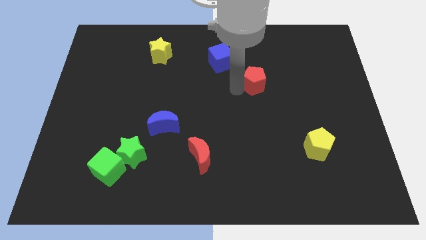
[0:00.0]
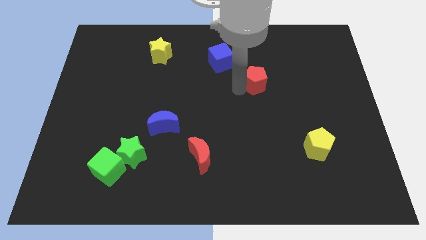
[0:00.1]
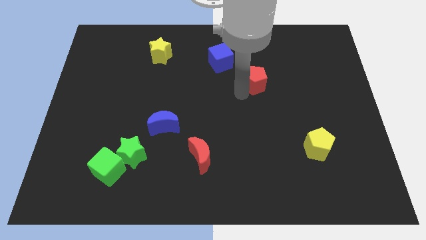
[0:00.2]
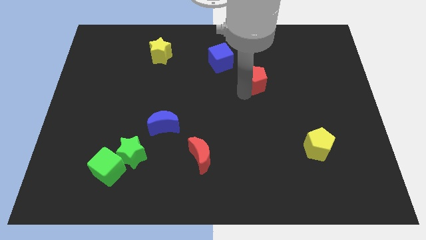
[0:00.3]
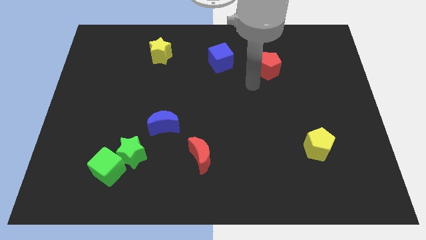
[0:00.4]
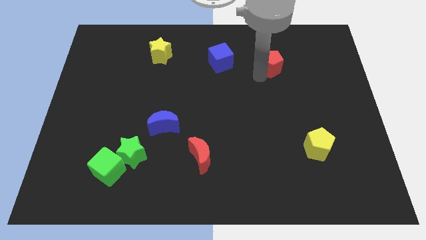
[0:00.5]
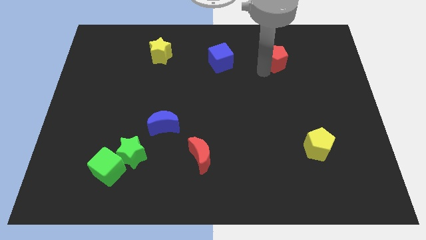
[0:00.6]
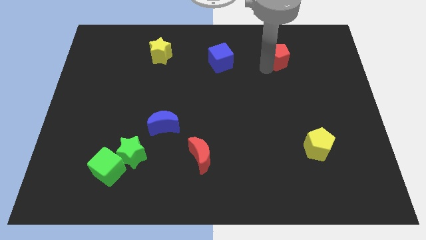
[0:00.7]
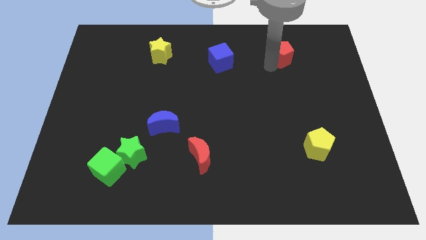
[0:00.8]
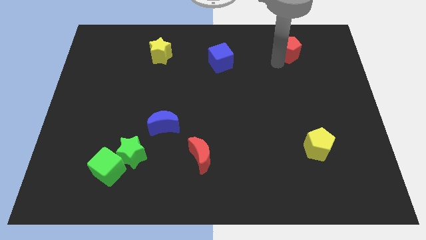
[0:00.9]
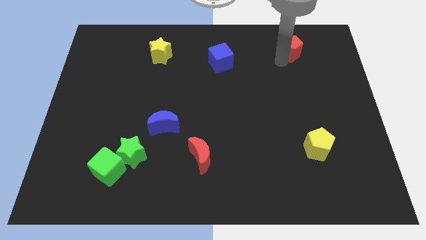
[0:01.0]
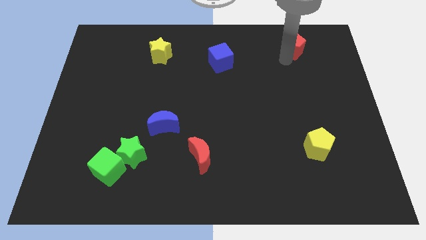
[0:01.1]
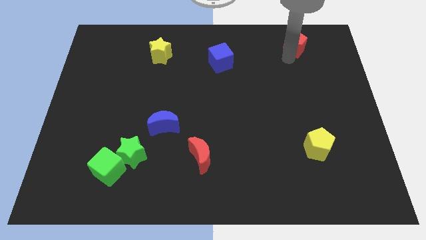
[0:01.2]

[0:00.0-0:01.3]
move red pentagon towards top right corner

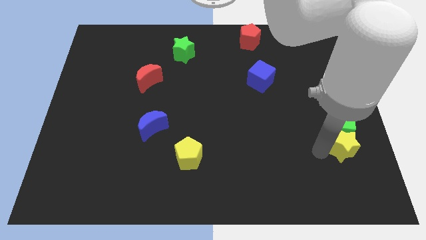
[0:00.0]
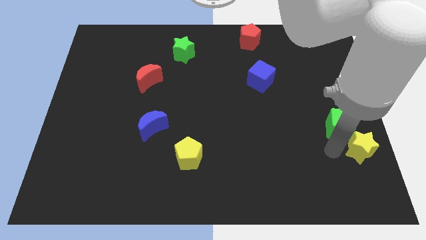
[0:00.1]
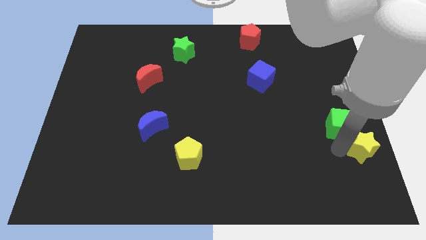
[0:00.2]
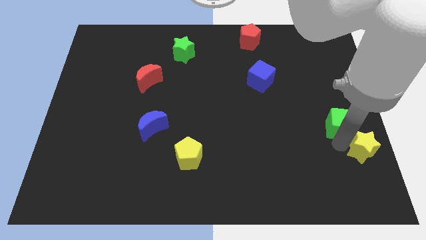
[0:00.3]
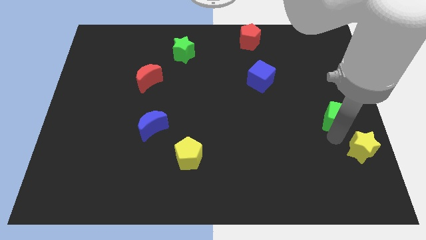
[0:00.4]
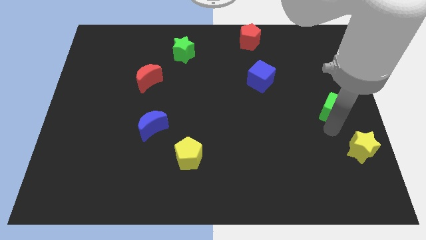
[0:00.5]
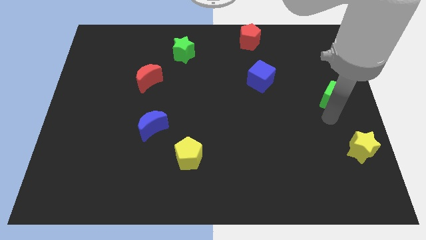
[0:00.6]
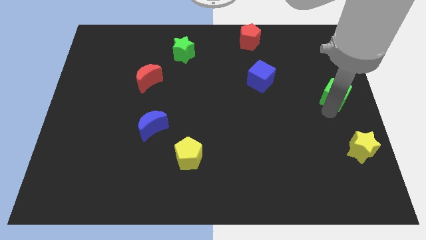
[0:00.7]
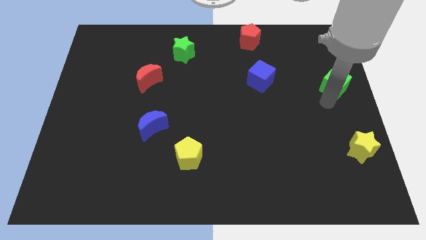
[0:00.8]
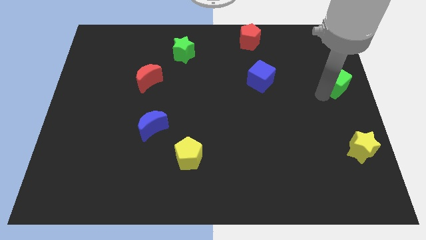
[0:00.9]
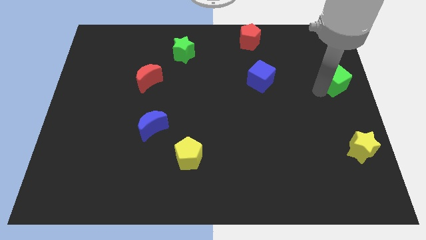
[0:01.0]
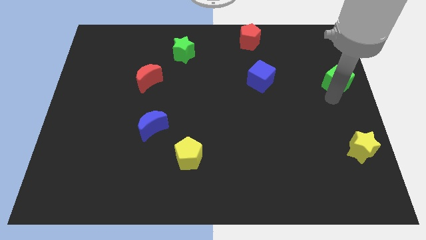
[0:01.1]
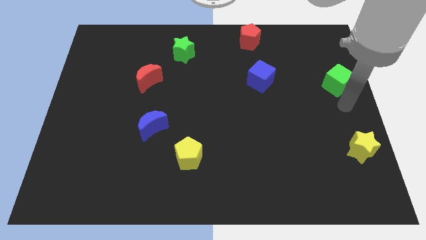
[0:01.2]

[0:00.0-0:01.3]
separate the green cube and yellow star

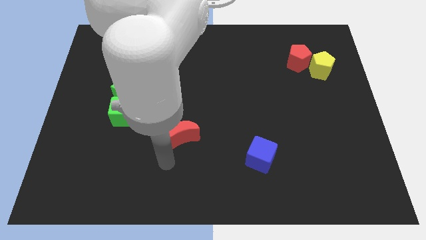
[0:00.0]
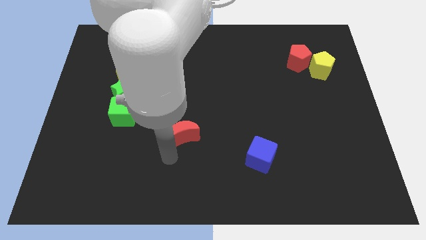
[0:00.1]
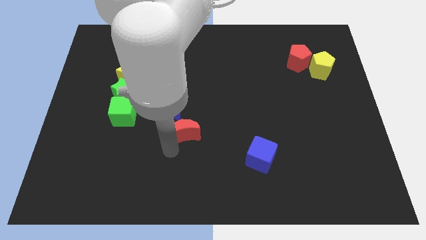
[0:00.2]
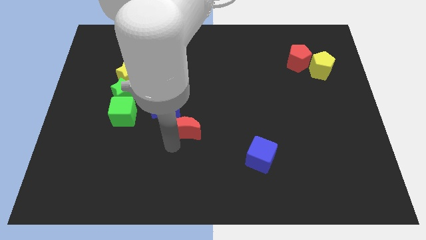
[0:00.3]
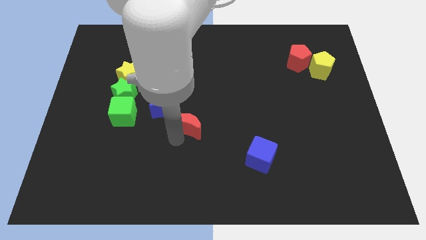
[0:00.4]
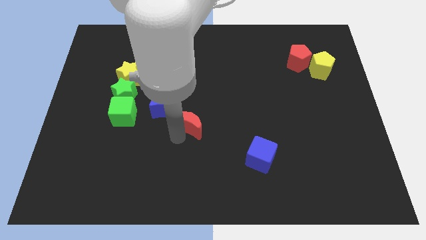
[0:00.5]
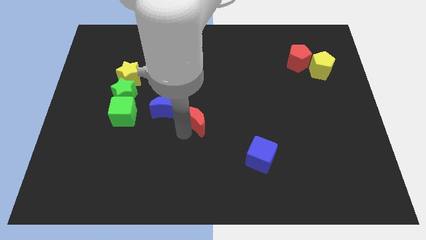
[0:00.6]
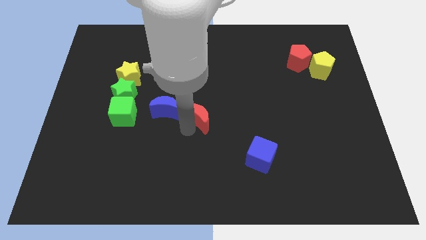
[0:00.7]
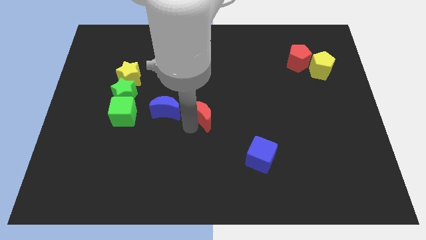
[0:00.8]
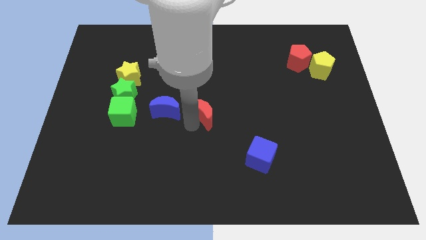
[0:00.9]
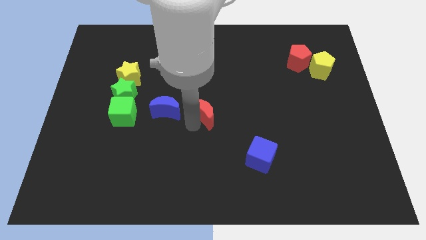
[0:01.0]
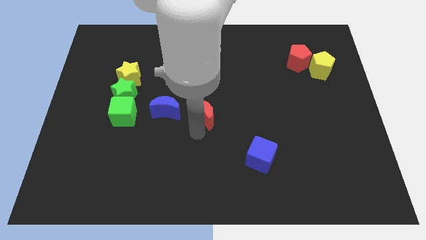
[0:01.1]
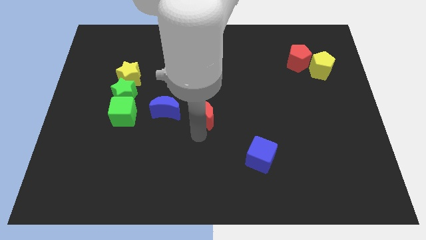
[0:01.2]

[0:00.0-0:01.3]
push the red crescent to the right of blue crescent

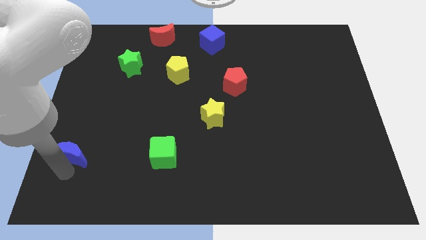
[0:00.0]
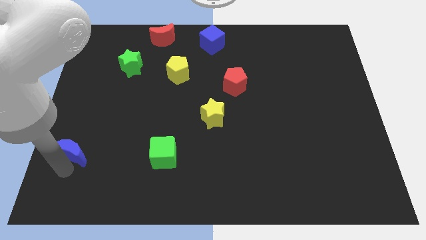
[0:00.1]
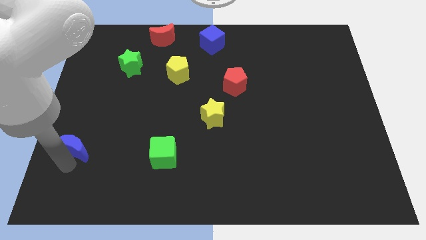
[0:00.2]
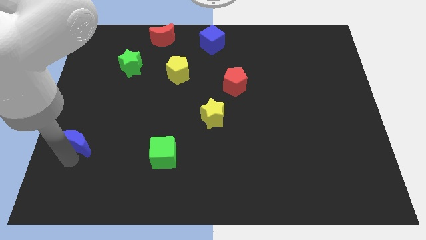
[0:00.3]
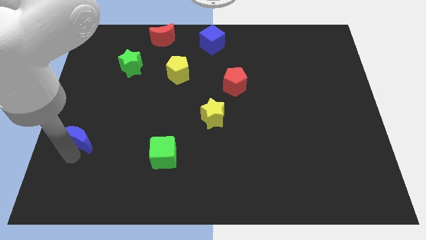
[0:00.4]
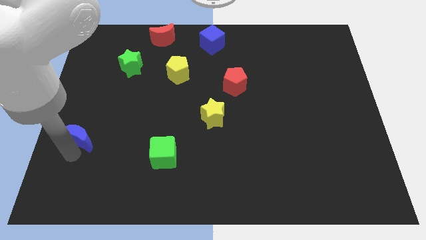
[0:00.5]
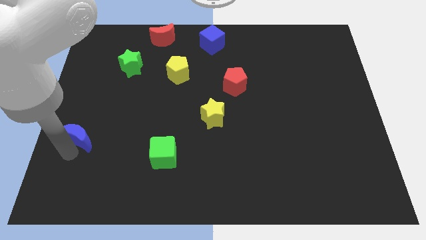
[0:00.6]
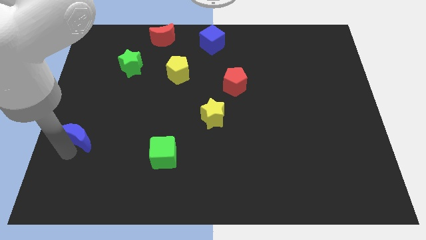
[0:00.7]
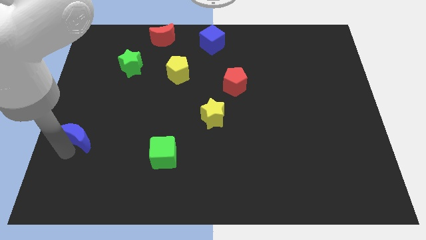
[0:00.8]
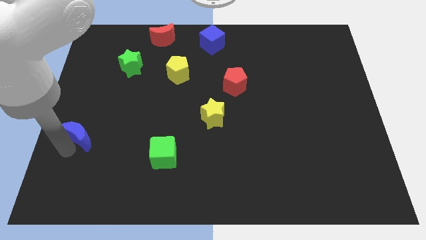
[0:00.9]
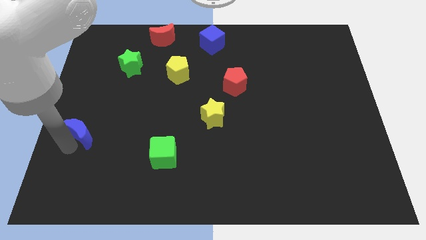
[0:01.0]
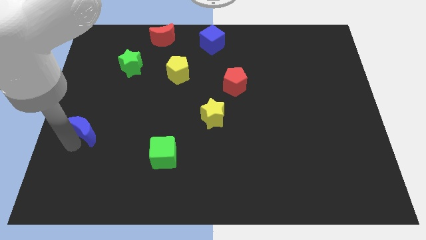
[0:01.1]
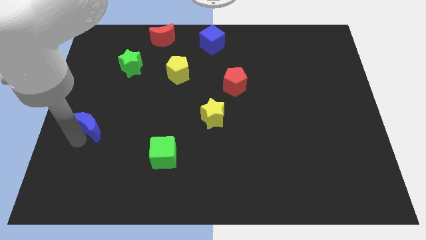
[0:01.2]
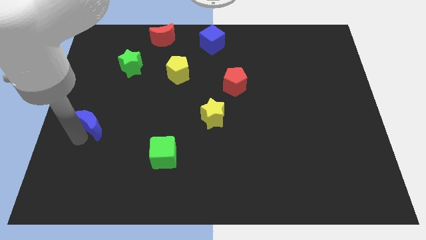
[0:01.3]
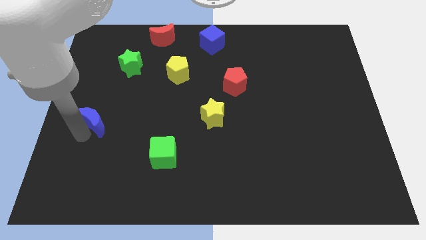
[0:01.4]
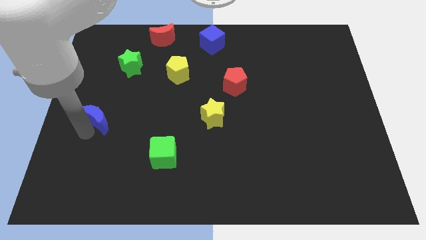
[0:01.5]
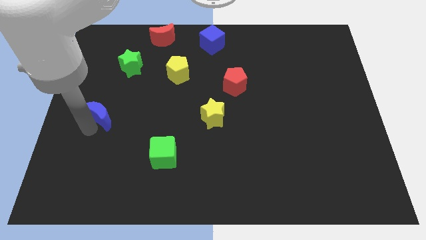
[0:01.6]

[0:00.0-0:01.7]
move the blue moon to the center left

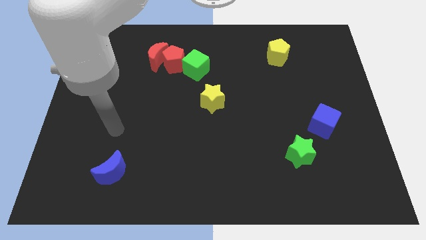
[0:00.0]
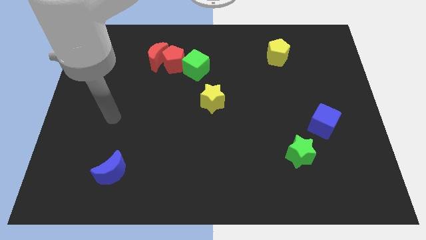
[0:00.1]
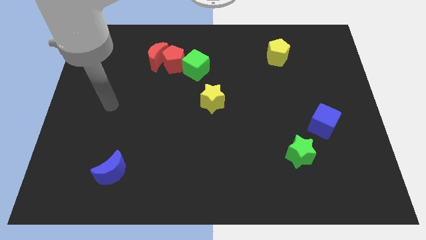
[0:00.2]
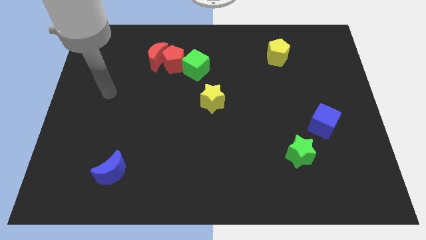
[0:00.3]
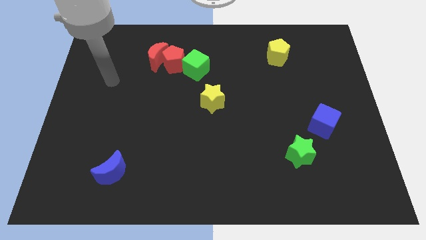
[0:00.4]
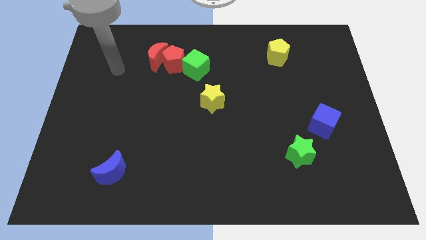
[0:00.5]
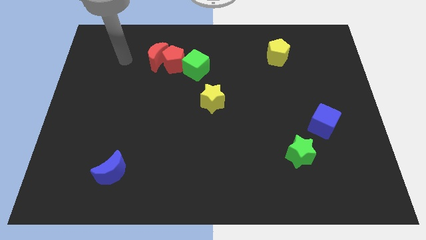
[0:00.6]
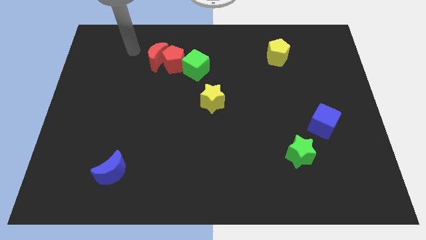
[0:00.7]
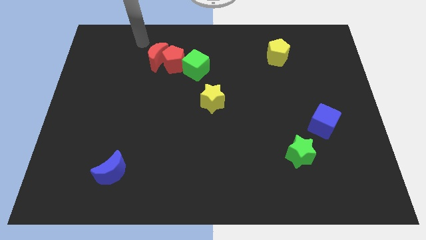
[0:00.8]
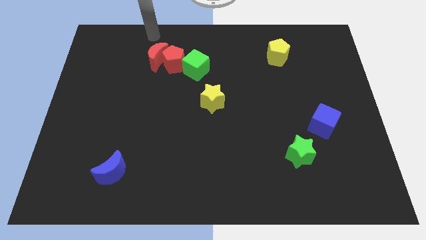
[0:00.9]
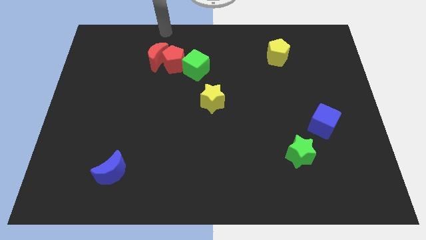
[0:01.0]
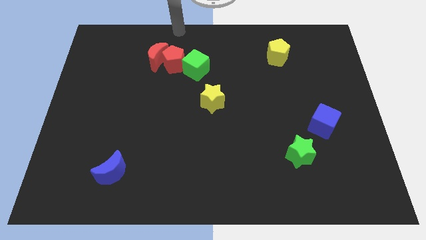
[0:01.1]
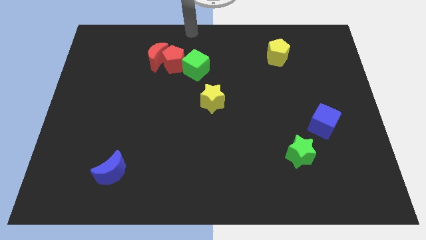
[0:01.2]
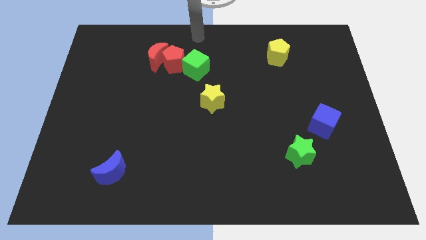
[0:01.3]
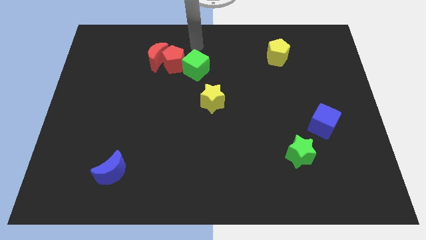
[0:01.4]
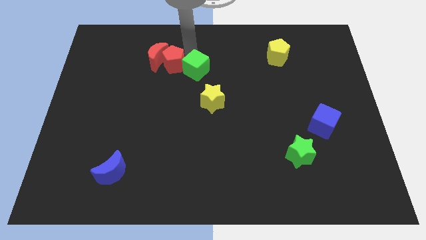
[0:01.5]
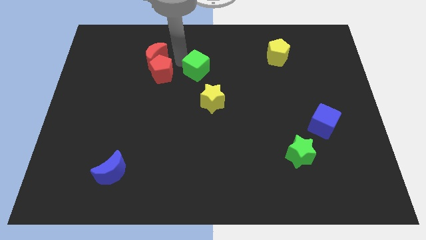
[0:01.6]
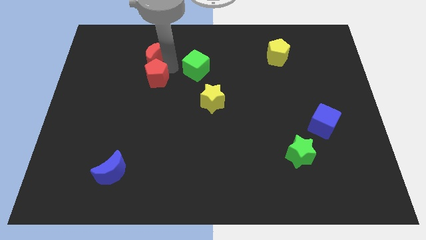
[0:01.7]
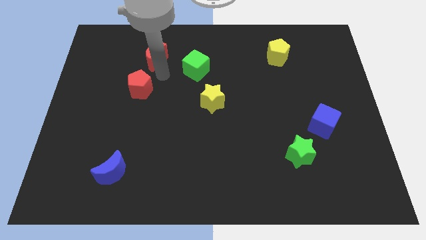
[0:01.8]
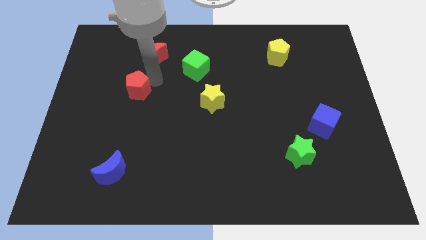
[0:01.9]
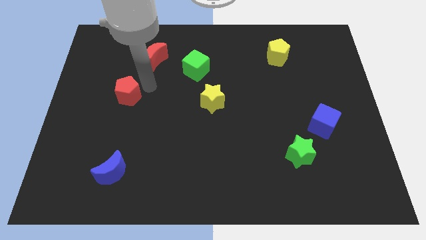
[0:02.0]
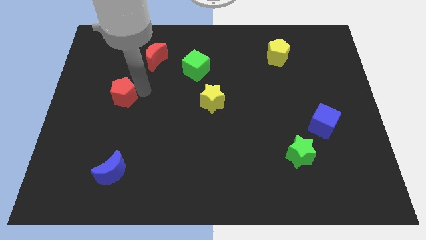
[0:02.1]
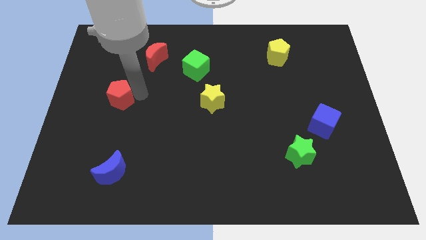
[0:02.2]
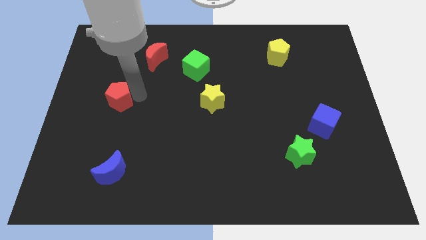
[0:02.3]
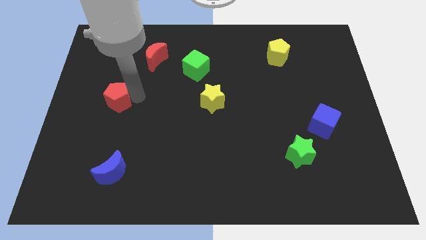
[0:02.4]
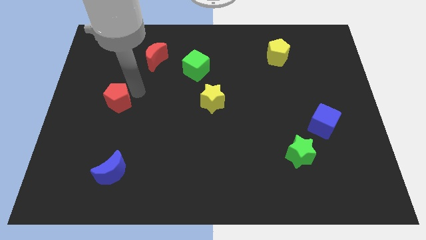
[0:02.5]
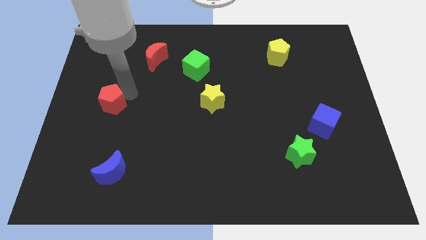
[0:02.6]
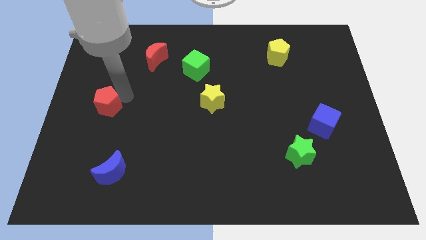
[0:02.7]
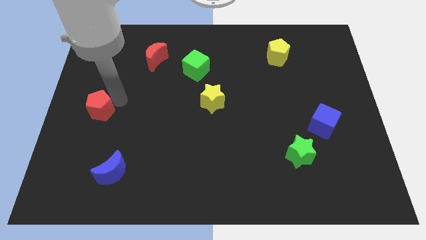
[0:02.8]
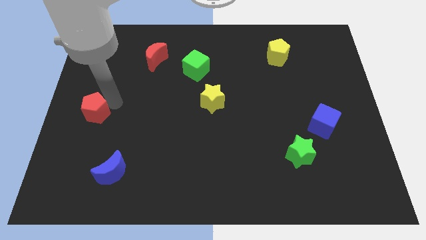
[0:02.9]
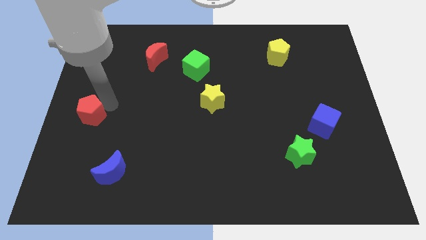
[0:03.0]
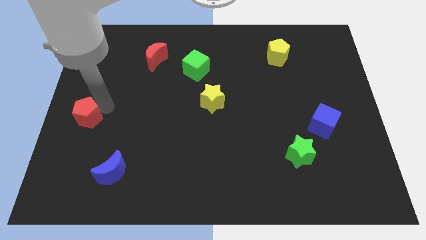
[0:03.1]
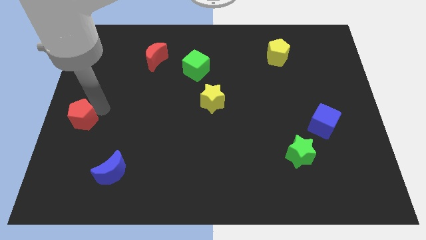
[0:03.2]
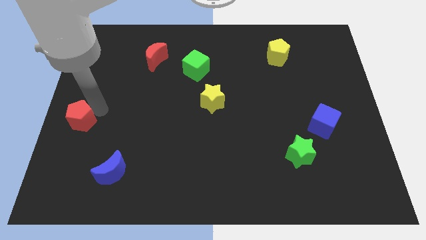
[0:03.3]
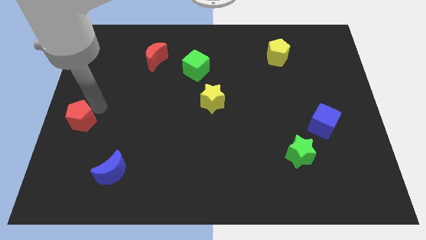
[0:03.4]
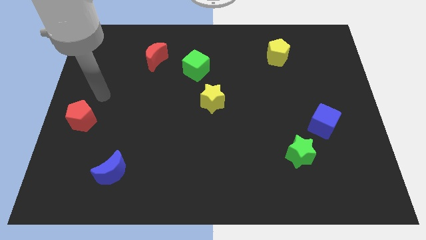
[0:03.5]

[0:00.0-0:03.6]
move the red pentagon diagonally to the top left side of the blue crescent
